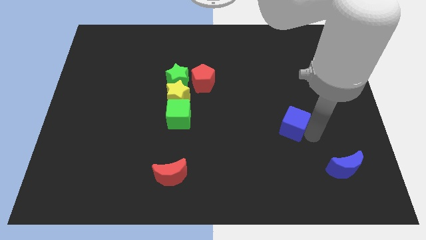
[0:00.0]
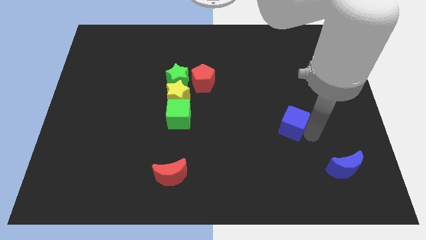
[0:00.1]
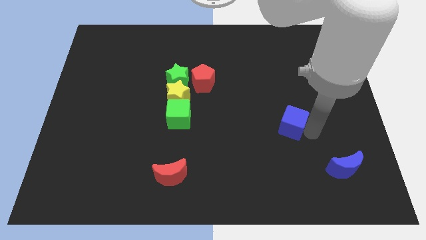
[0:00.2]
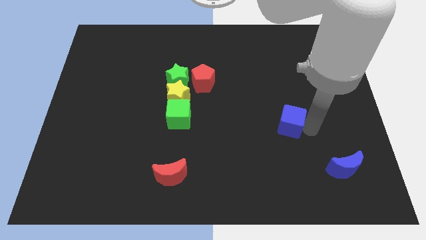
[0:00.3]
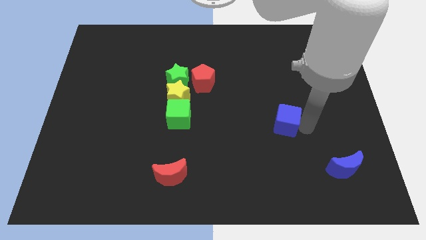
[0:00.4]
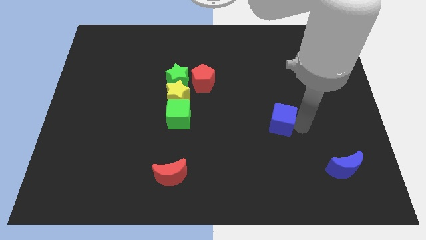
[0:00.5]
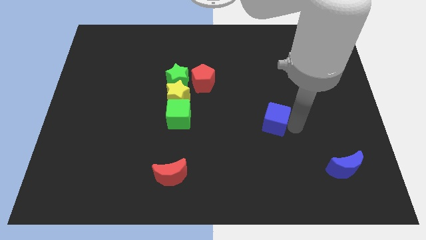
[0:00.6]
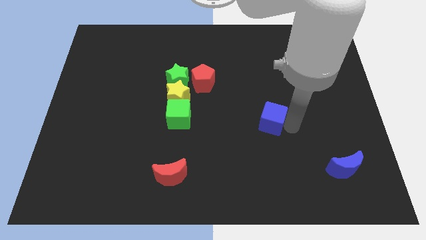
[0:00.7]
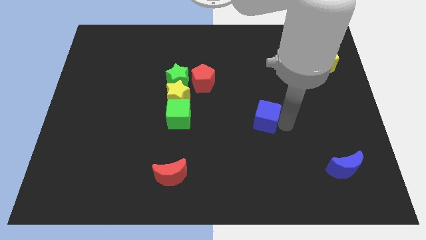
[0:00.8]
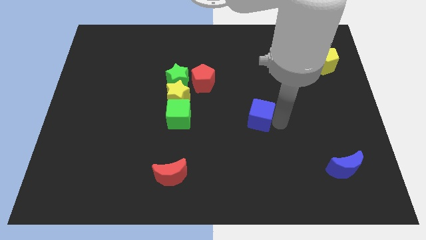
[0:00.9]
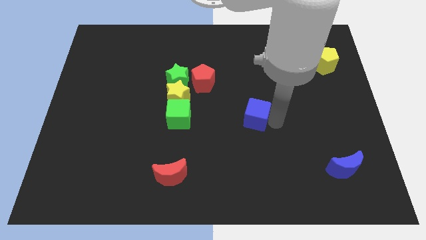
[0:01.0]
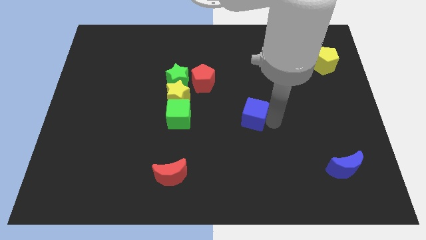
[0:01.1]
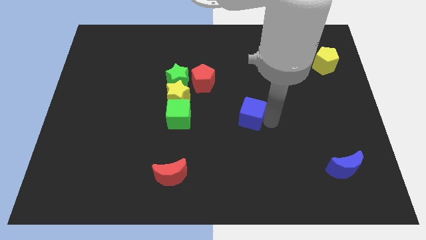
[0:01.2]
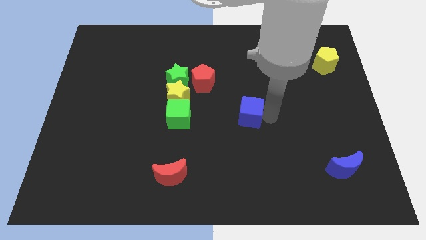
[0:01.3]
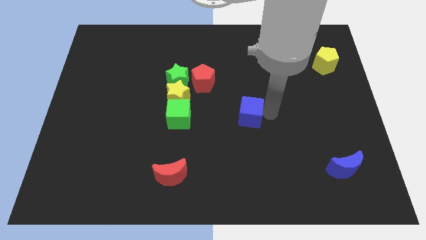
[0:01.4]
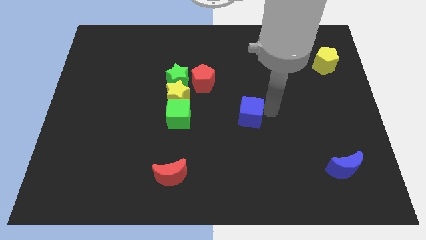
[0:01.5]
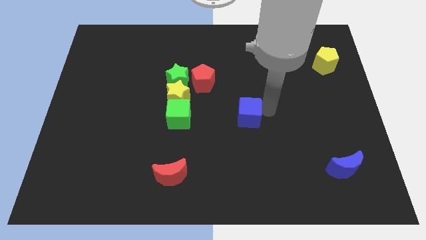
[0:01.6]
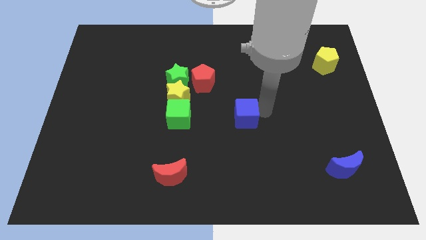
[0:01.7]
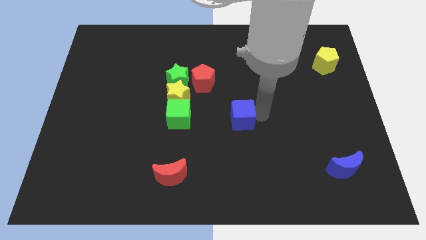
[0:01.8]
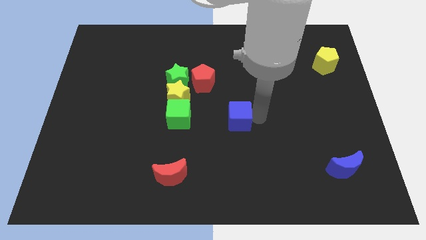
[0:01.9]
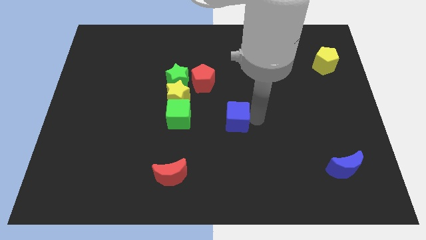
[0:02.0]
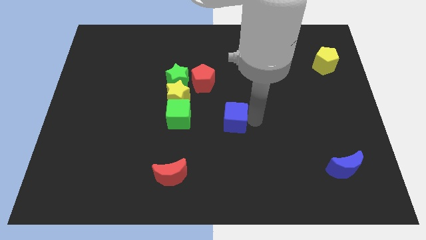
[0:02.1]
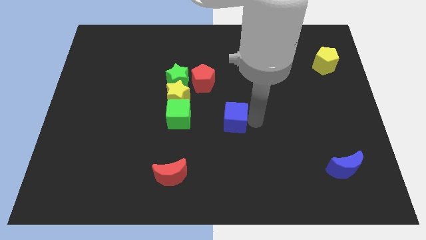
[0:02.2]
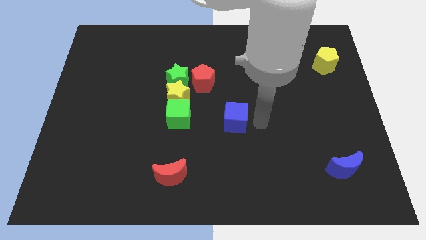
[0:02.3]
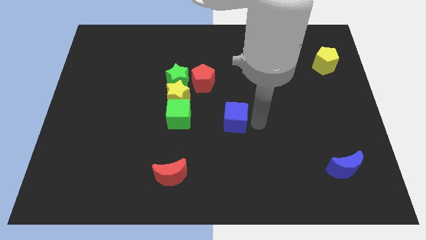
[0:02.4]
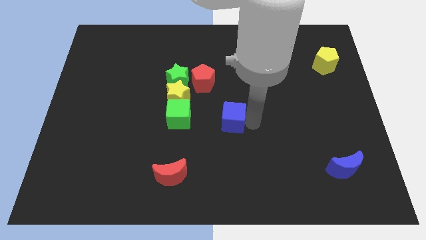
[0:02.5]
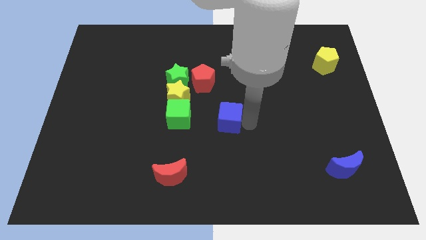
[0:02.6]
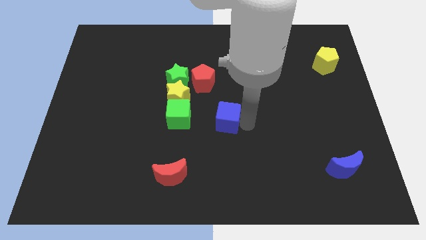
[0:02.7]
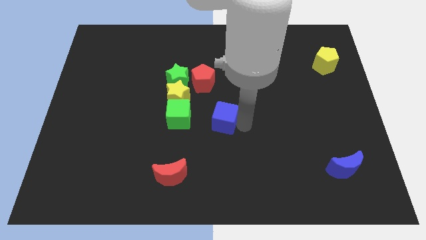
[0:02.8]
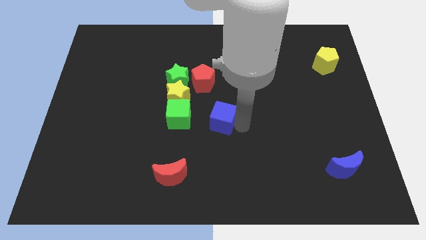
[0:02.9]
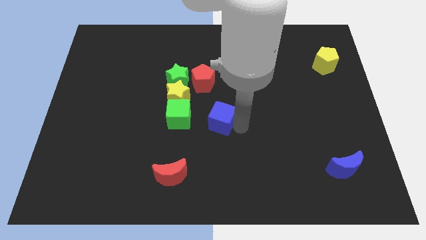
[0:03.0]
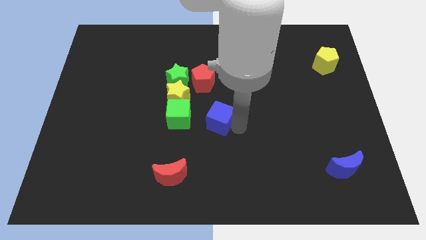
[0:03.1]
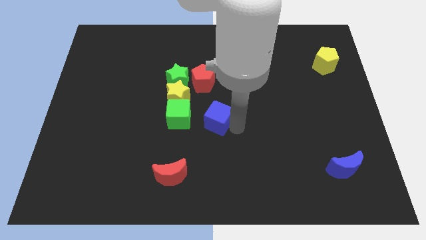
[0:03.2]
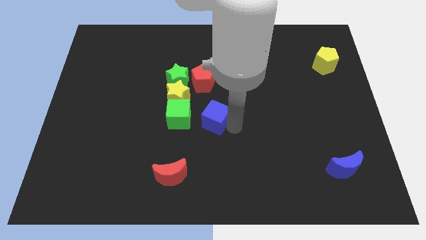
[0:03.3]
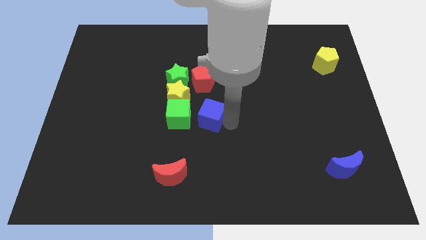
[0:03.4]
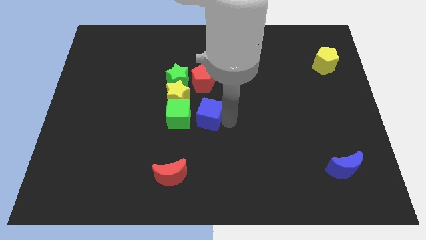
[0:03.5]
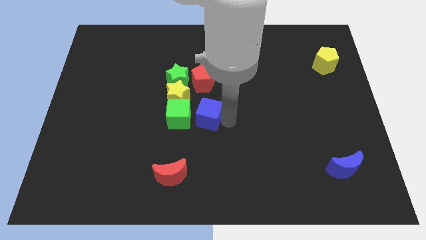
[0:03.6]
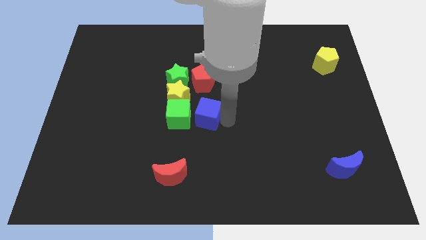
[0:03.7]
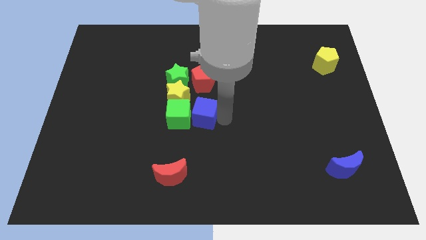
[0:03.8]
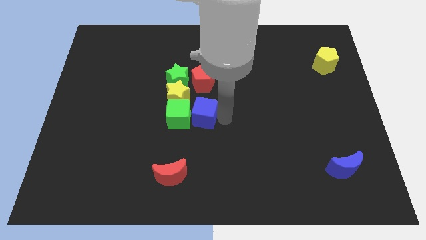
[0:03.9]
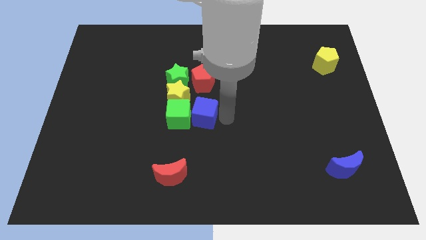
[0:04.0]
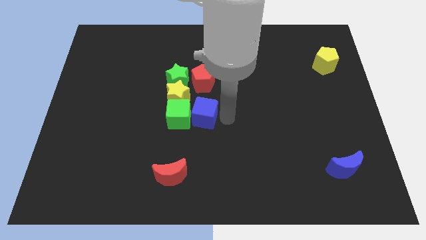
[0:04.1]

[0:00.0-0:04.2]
drag blue cube to the right of the green cube

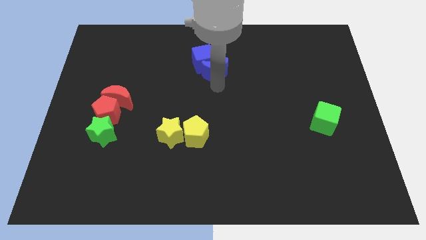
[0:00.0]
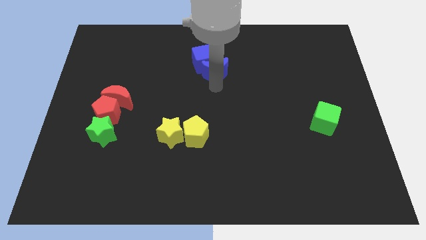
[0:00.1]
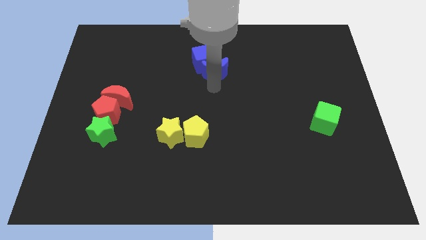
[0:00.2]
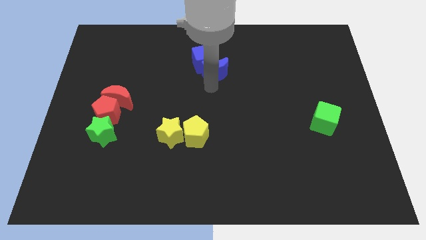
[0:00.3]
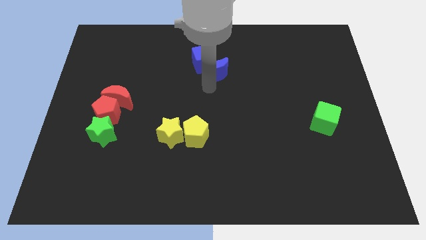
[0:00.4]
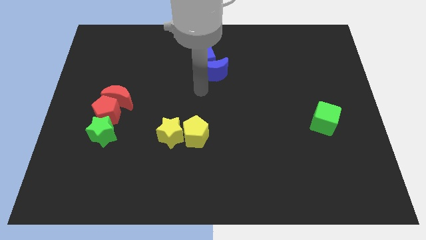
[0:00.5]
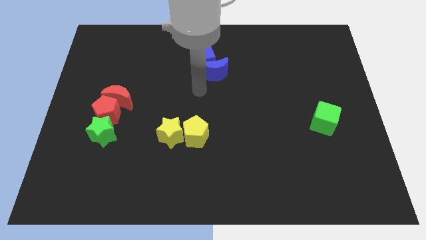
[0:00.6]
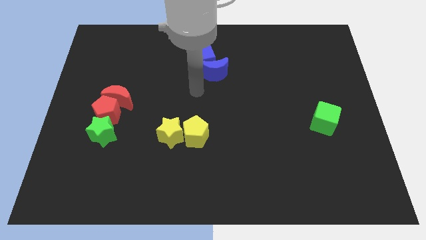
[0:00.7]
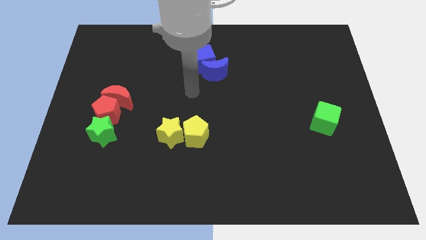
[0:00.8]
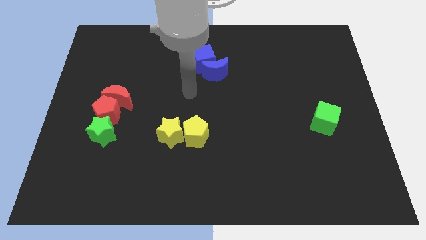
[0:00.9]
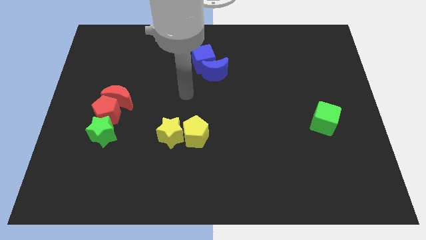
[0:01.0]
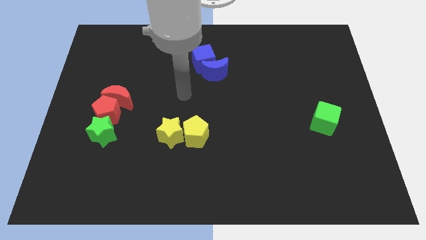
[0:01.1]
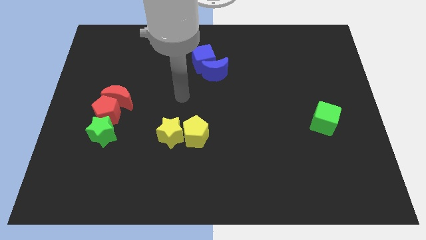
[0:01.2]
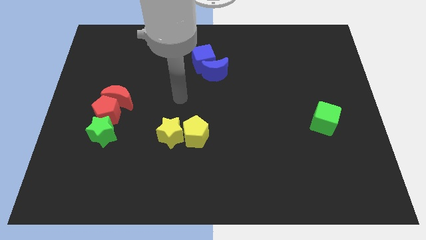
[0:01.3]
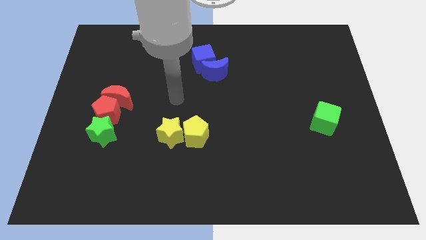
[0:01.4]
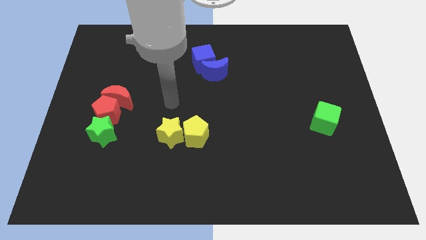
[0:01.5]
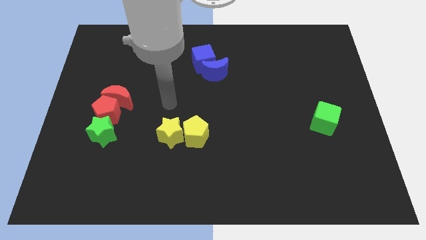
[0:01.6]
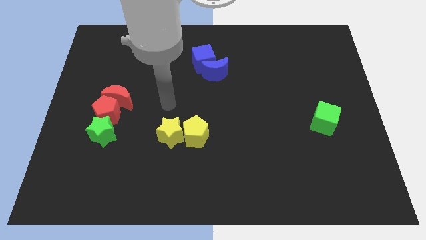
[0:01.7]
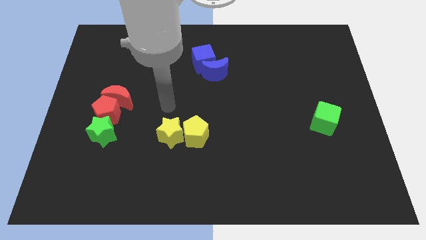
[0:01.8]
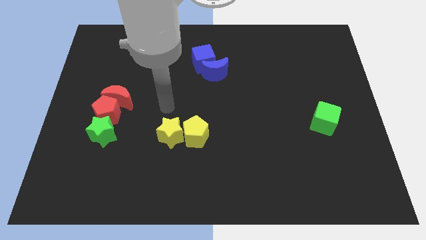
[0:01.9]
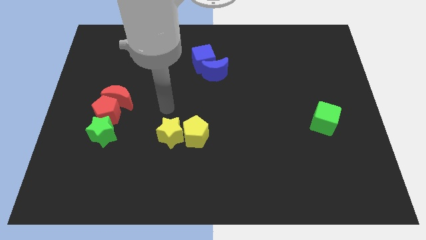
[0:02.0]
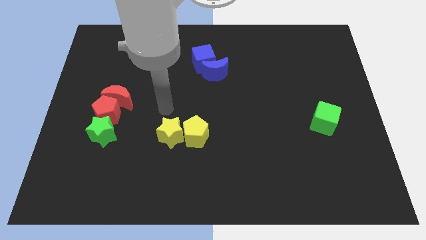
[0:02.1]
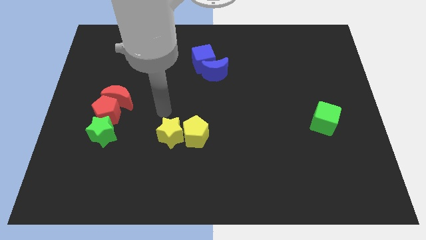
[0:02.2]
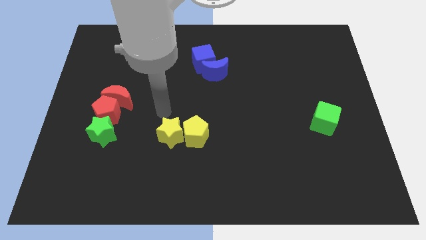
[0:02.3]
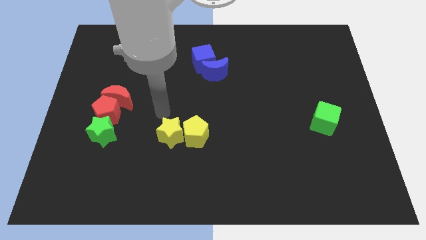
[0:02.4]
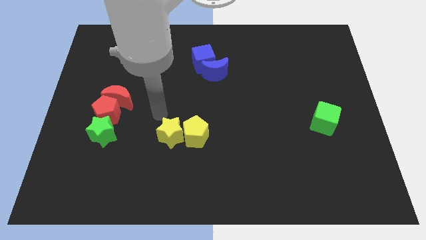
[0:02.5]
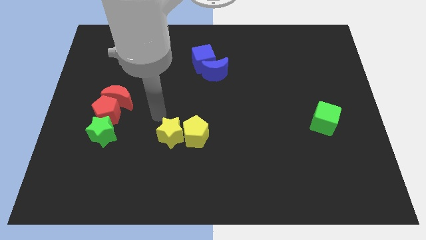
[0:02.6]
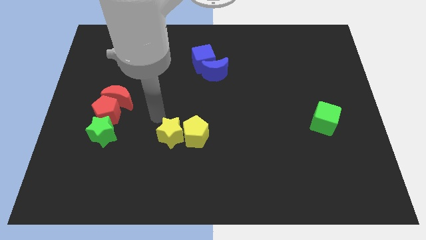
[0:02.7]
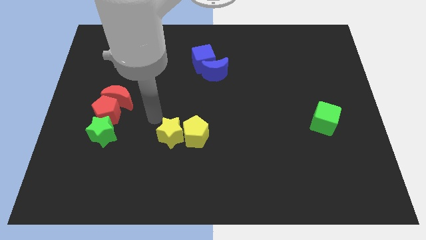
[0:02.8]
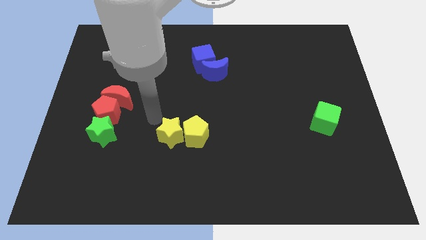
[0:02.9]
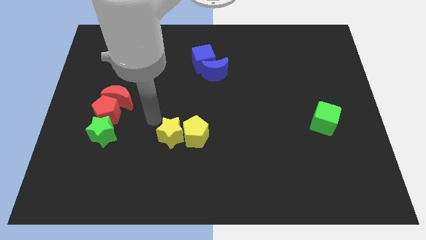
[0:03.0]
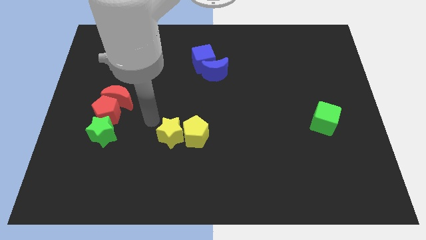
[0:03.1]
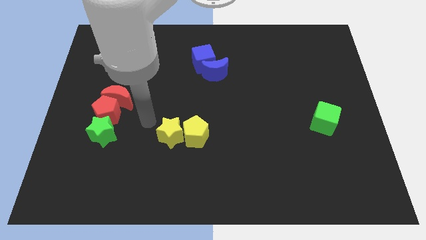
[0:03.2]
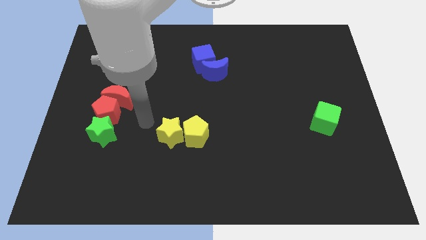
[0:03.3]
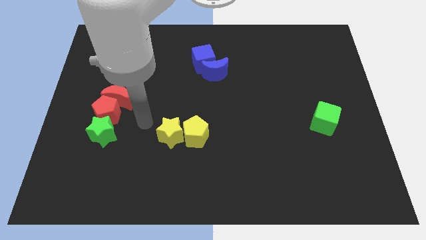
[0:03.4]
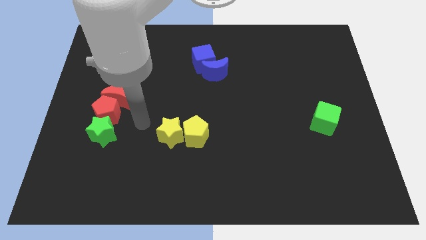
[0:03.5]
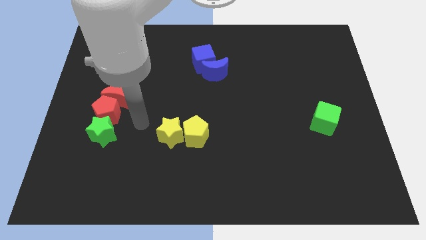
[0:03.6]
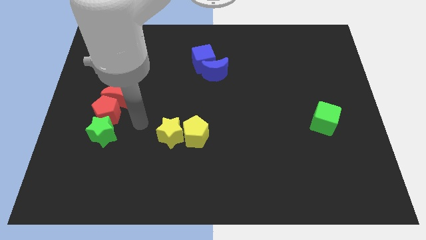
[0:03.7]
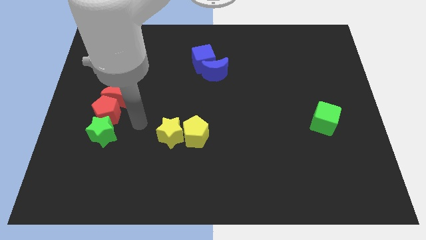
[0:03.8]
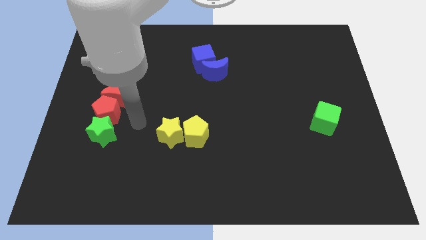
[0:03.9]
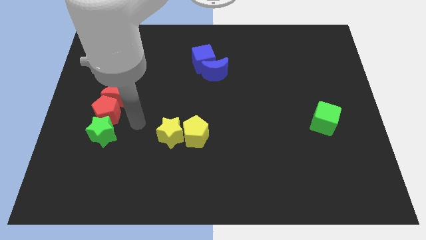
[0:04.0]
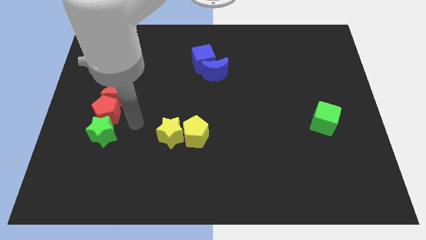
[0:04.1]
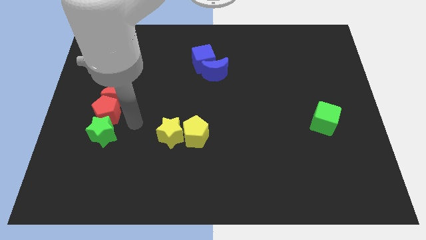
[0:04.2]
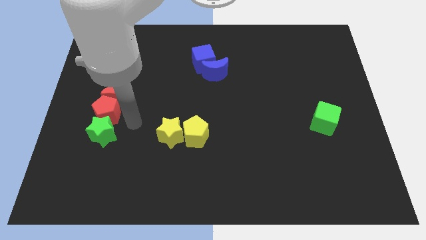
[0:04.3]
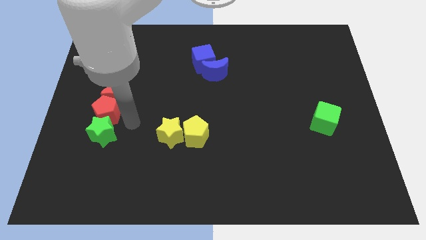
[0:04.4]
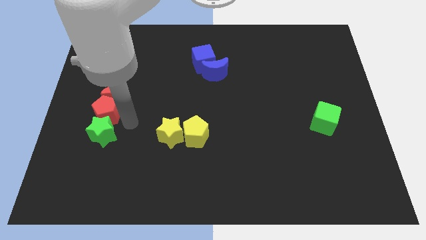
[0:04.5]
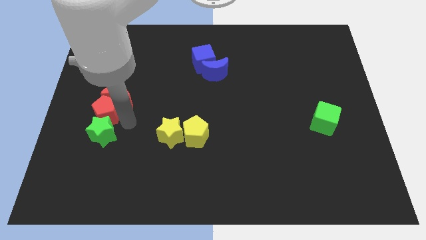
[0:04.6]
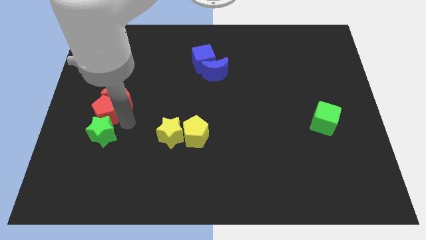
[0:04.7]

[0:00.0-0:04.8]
move your arm away from the blue moon
